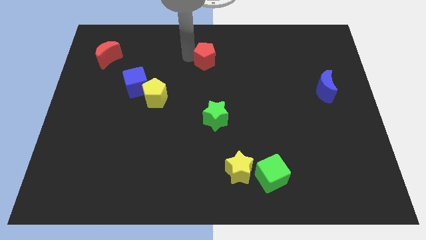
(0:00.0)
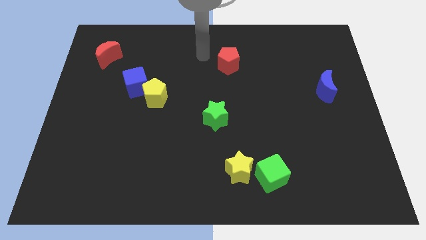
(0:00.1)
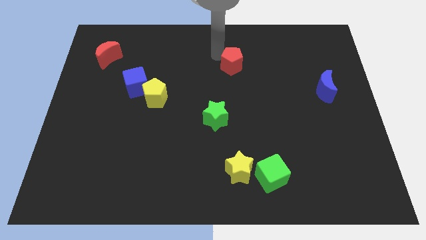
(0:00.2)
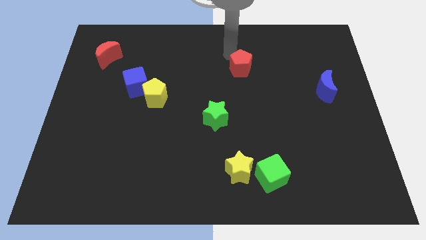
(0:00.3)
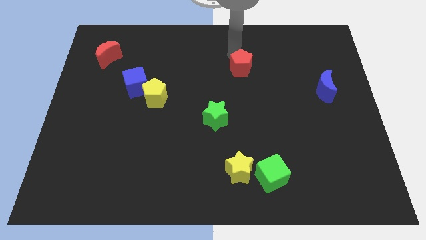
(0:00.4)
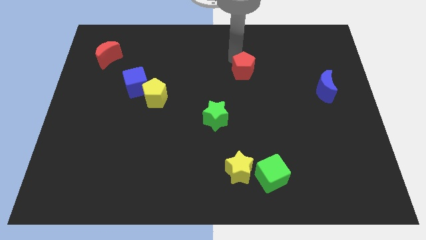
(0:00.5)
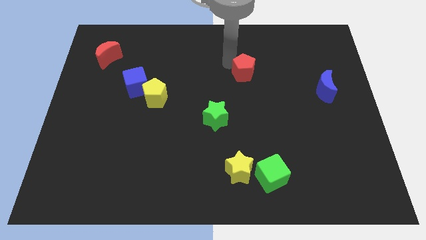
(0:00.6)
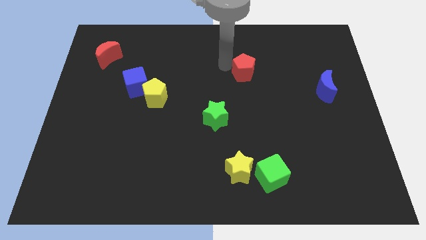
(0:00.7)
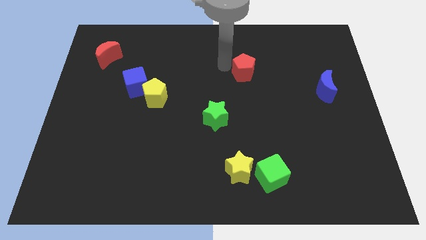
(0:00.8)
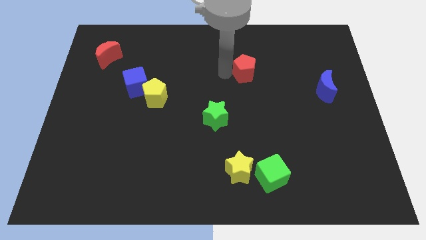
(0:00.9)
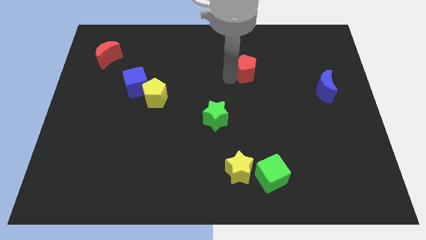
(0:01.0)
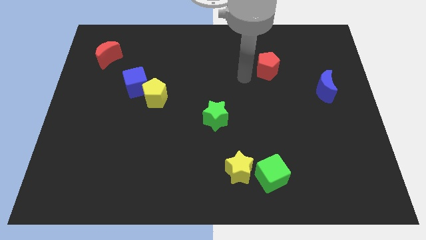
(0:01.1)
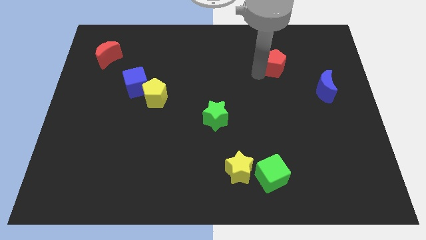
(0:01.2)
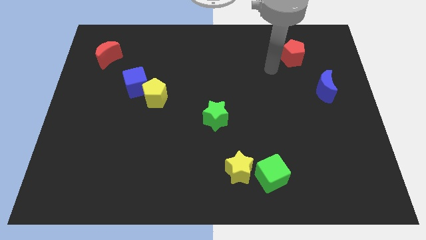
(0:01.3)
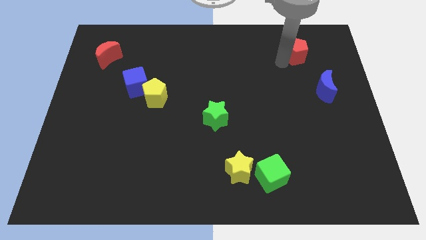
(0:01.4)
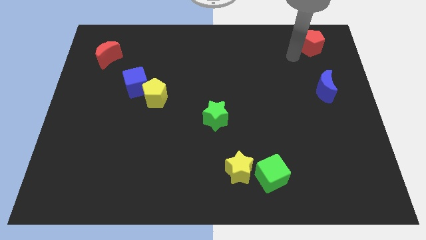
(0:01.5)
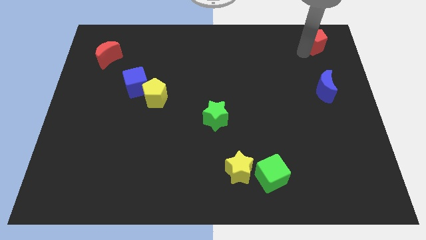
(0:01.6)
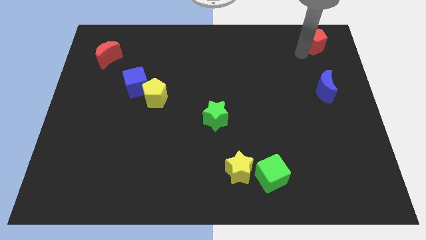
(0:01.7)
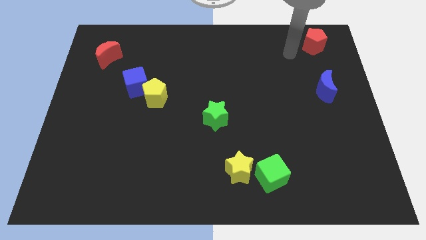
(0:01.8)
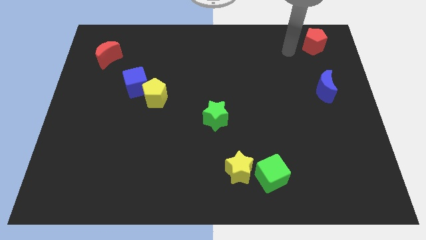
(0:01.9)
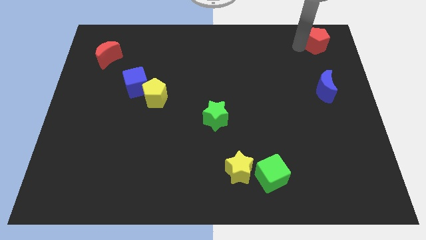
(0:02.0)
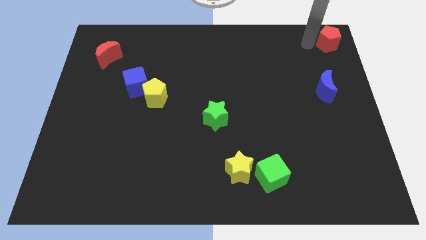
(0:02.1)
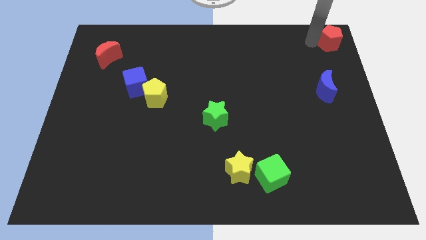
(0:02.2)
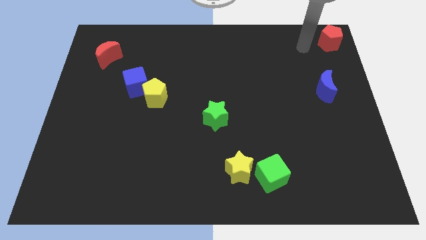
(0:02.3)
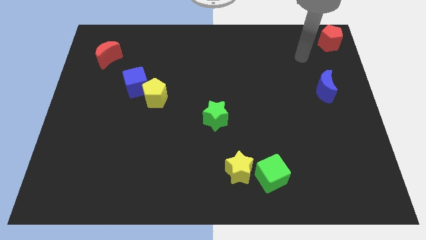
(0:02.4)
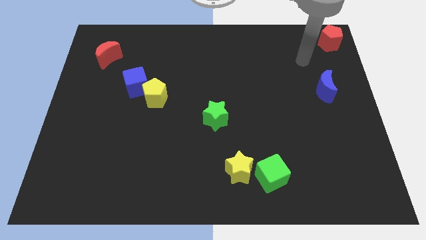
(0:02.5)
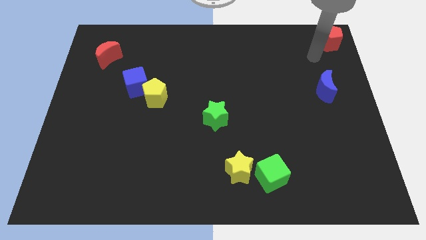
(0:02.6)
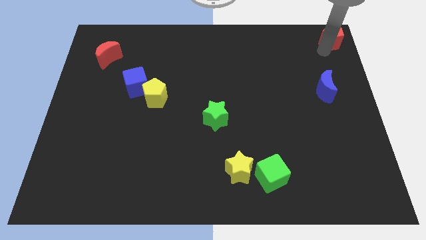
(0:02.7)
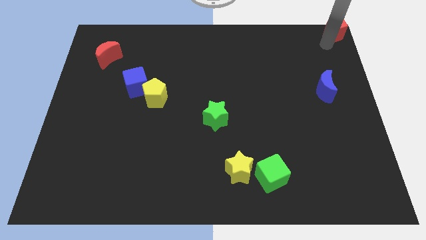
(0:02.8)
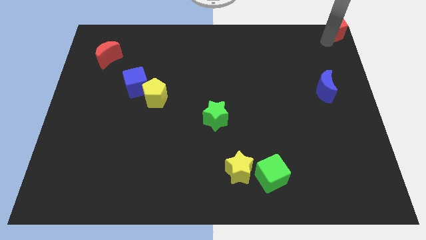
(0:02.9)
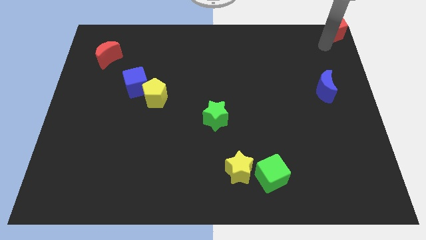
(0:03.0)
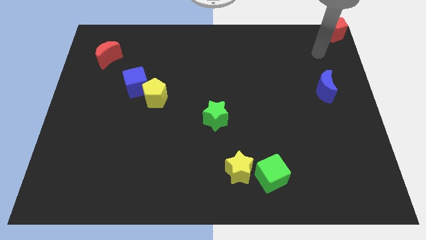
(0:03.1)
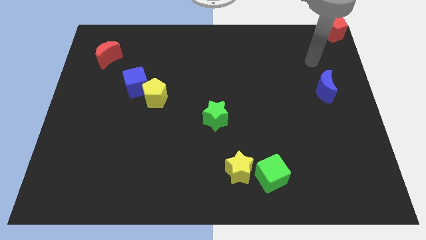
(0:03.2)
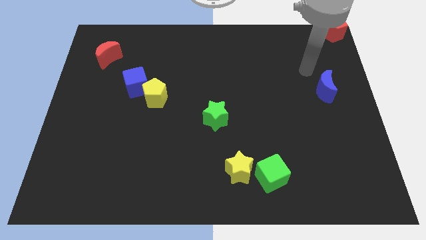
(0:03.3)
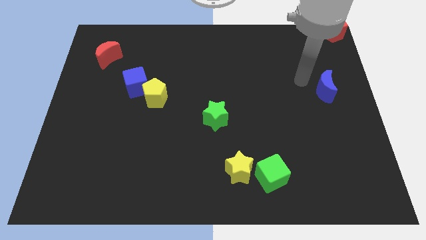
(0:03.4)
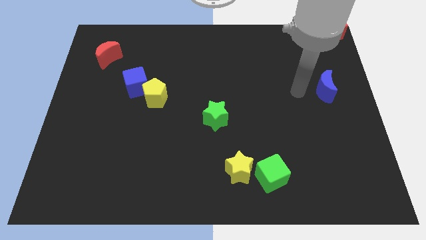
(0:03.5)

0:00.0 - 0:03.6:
push the red pentagon to the top right corner of the board

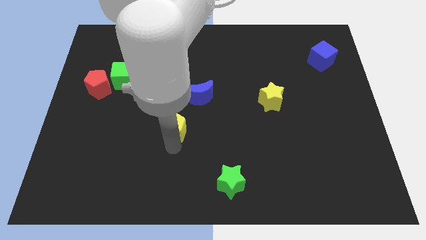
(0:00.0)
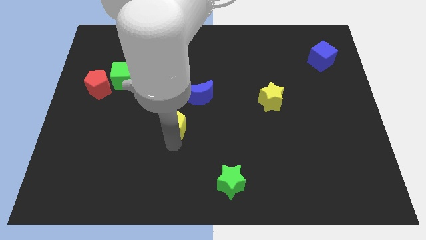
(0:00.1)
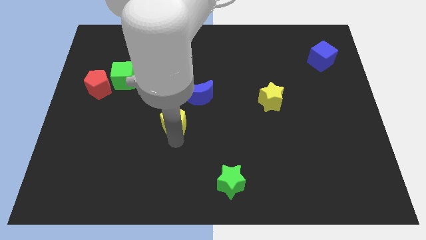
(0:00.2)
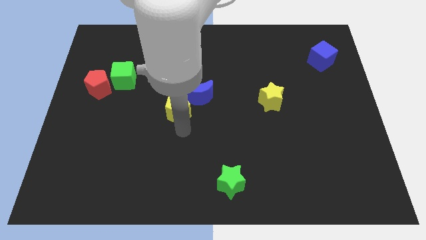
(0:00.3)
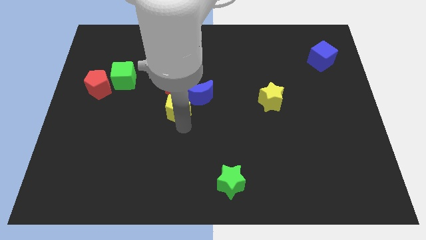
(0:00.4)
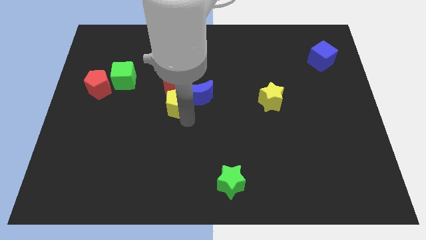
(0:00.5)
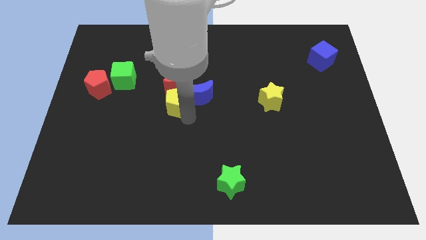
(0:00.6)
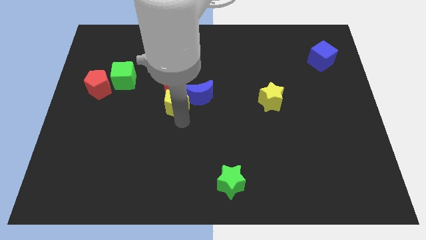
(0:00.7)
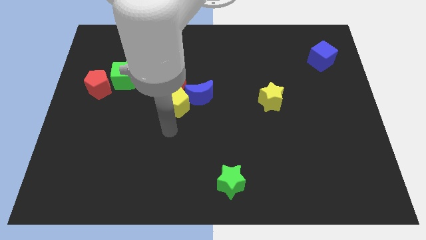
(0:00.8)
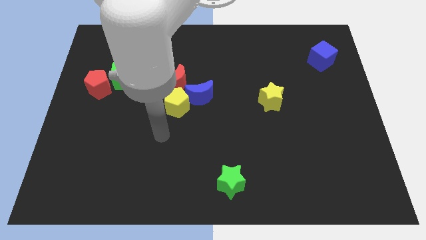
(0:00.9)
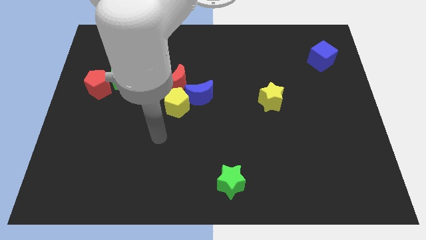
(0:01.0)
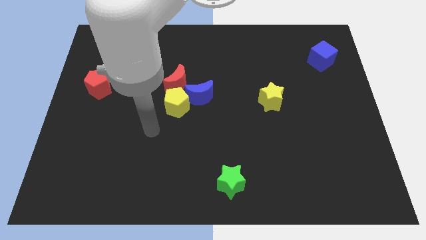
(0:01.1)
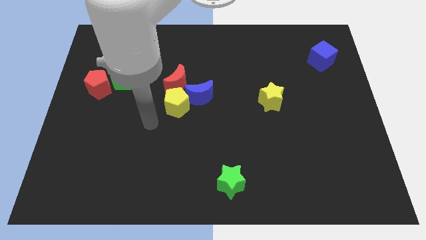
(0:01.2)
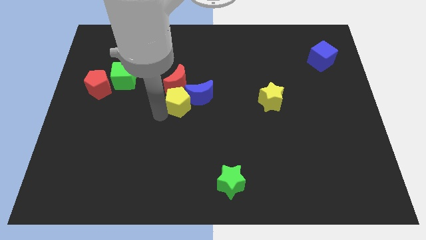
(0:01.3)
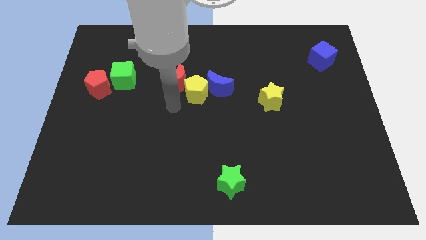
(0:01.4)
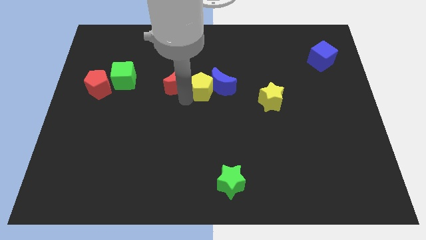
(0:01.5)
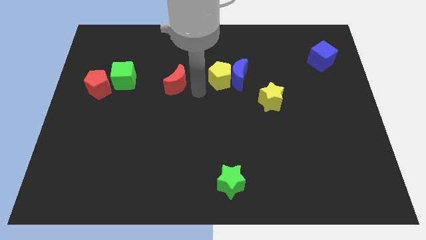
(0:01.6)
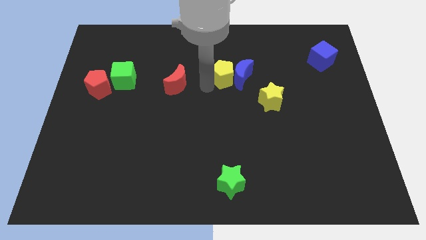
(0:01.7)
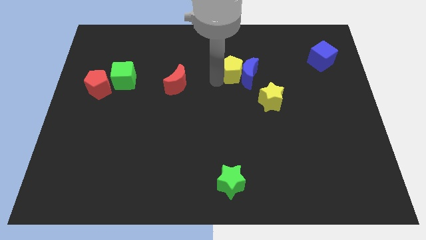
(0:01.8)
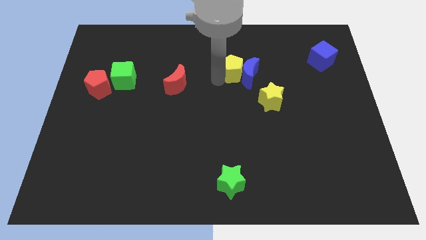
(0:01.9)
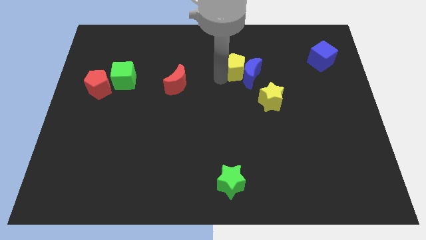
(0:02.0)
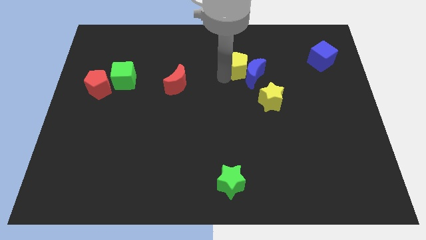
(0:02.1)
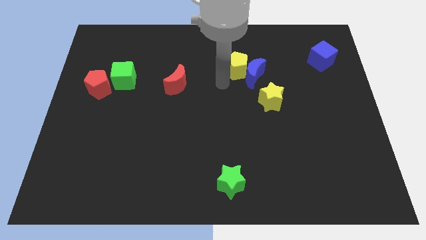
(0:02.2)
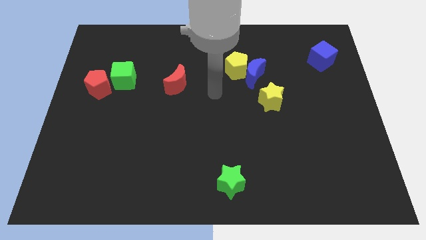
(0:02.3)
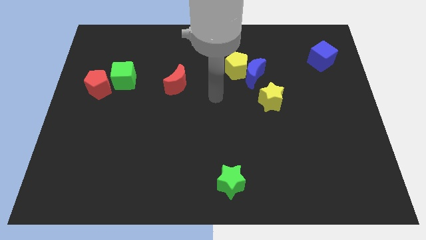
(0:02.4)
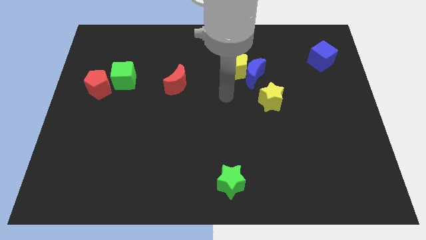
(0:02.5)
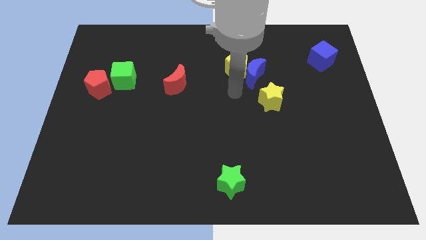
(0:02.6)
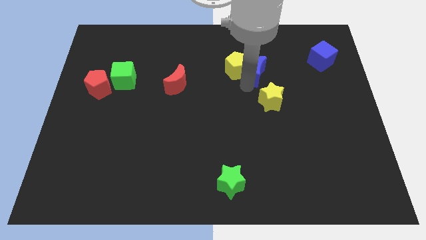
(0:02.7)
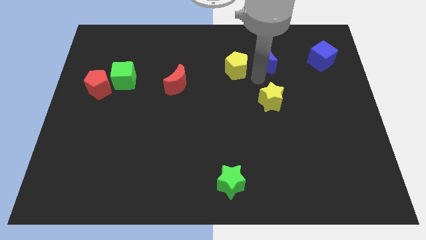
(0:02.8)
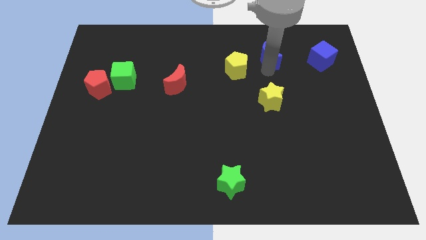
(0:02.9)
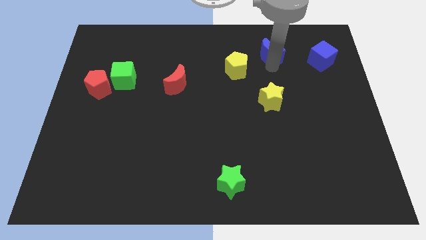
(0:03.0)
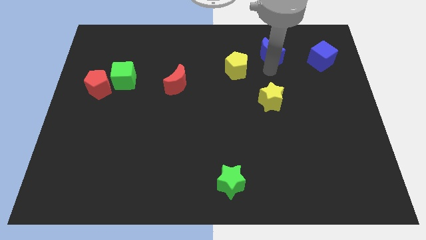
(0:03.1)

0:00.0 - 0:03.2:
place blue crescent beside blue cube

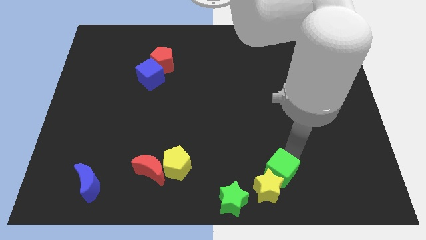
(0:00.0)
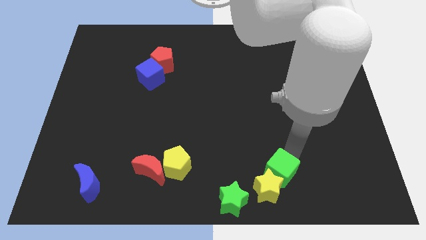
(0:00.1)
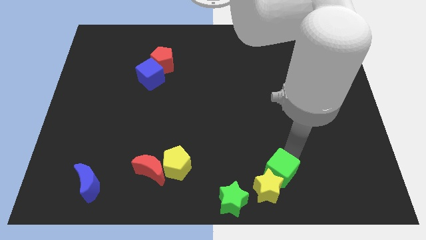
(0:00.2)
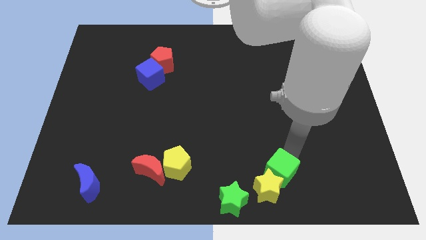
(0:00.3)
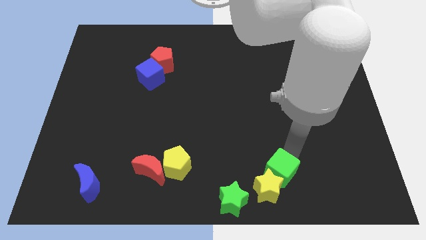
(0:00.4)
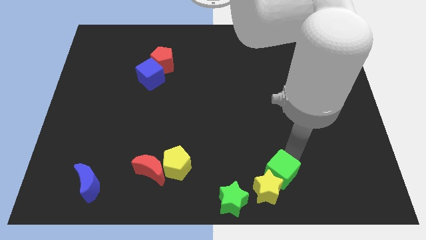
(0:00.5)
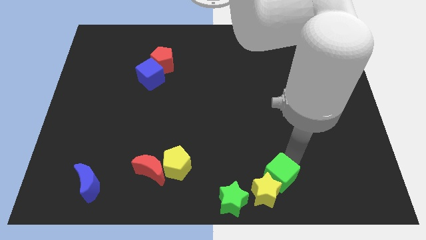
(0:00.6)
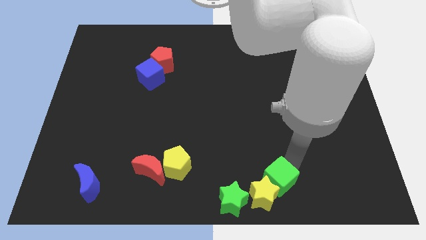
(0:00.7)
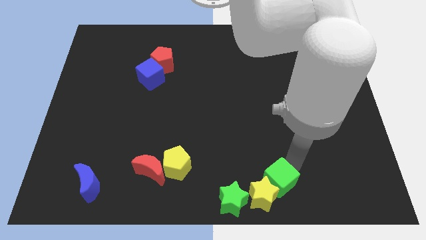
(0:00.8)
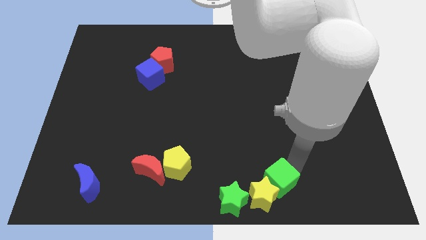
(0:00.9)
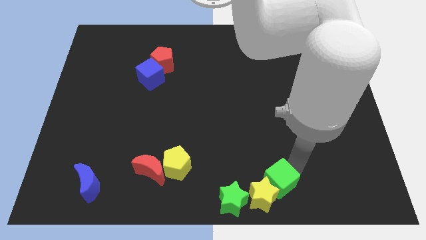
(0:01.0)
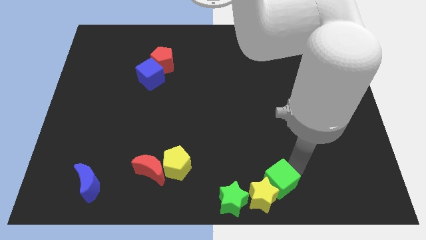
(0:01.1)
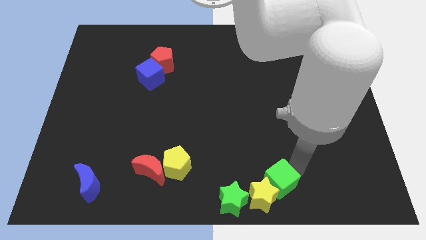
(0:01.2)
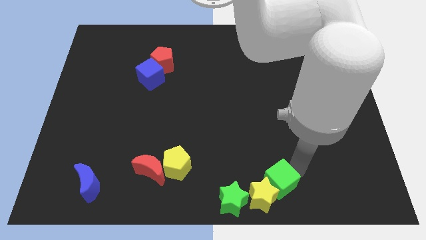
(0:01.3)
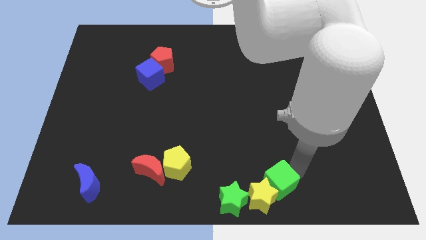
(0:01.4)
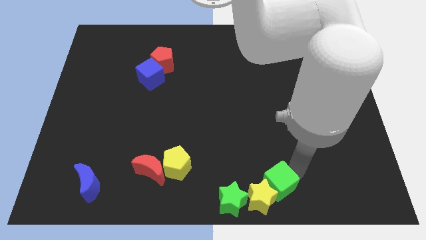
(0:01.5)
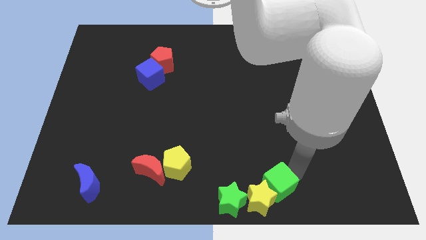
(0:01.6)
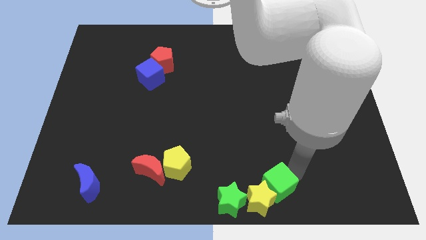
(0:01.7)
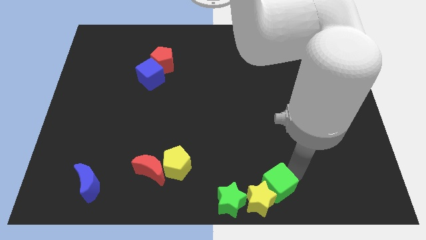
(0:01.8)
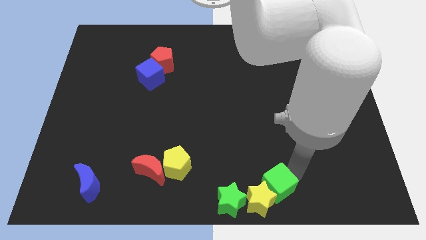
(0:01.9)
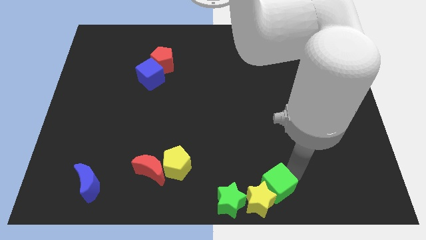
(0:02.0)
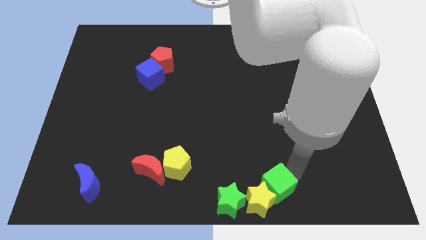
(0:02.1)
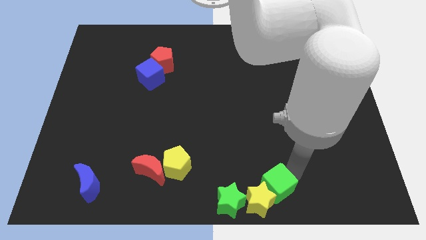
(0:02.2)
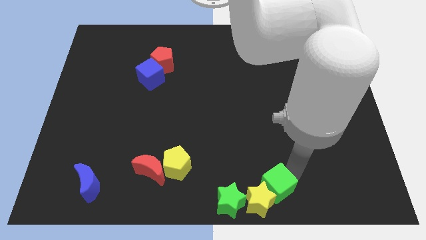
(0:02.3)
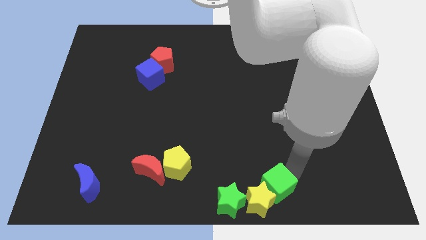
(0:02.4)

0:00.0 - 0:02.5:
push the green cube and the yellow star into the green star
